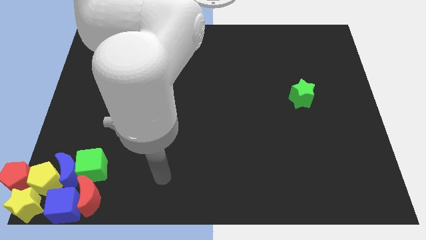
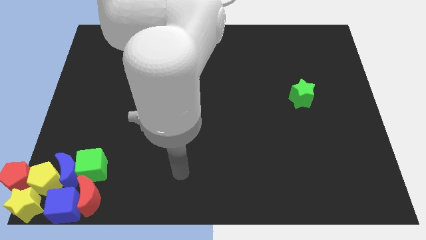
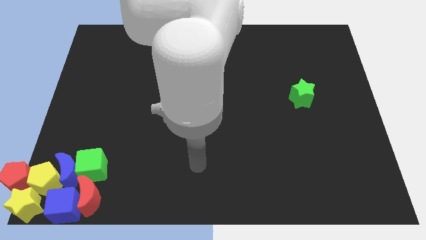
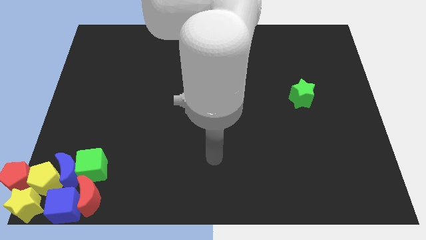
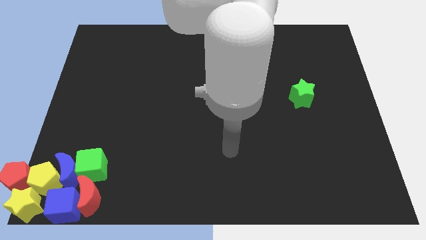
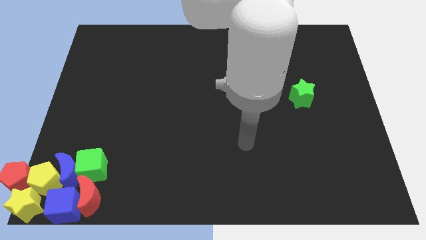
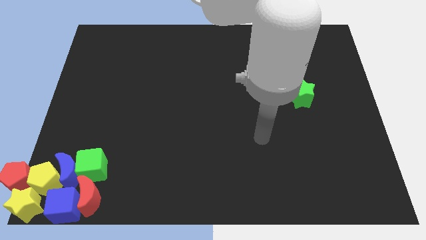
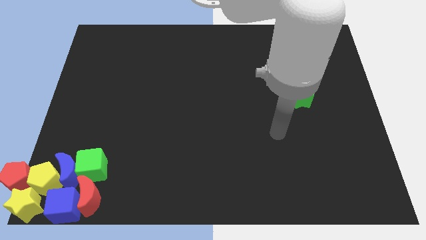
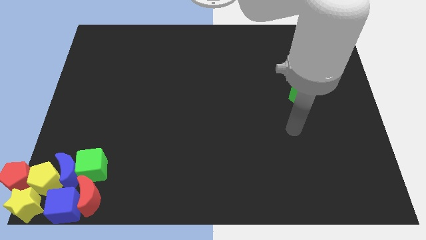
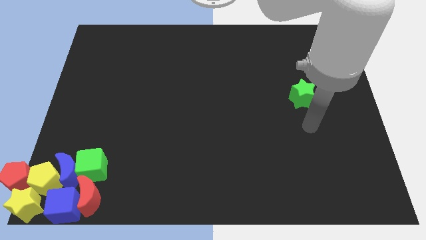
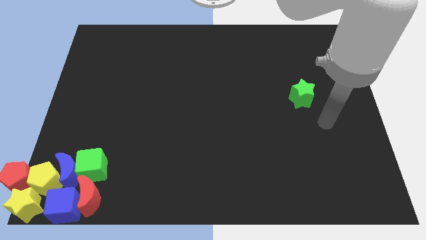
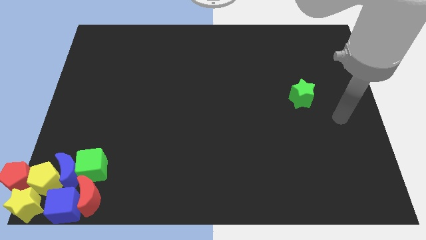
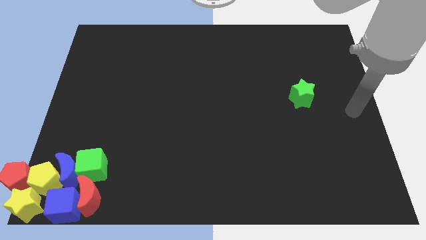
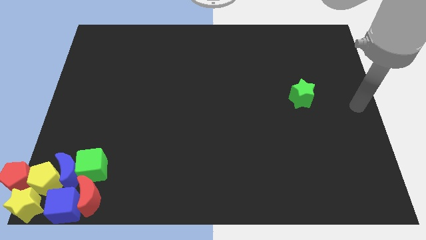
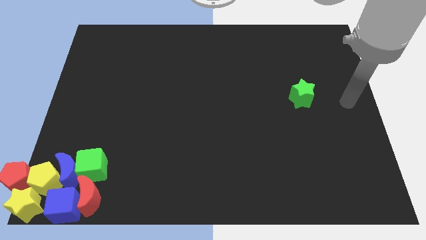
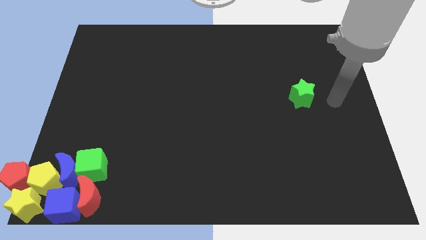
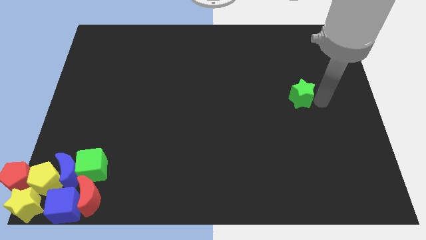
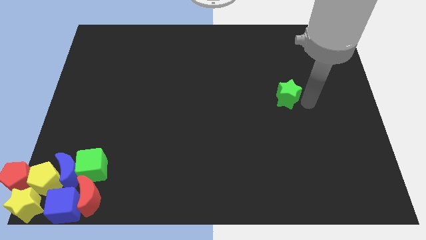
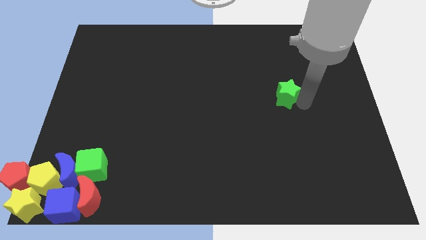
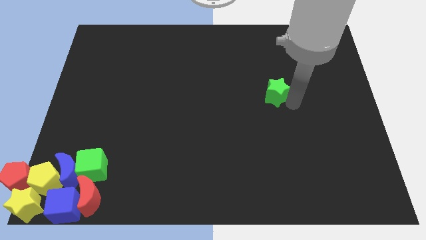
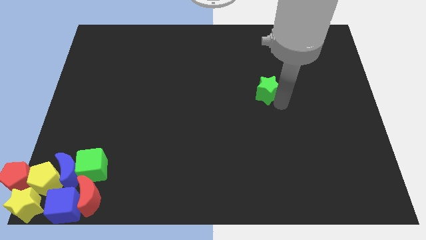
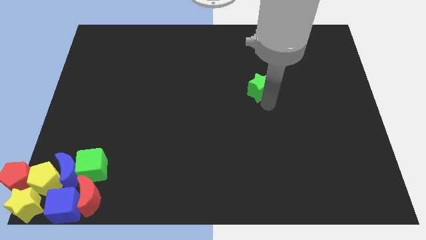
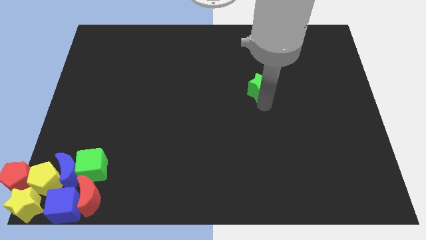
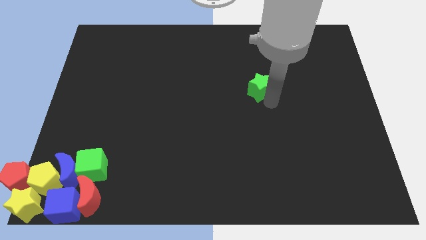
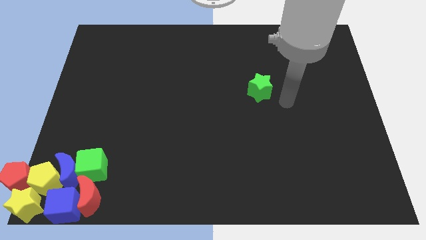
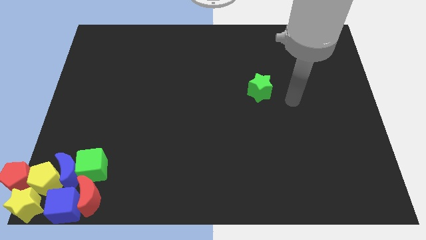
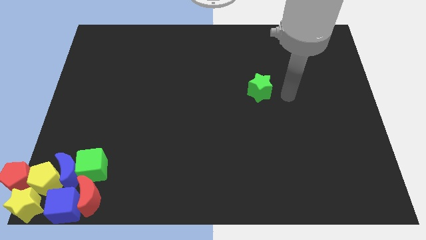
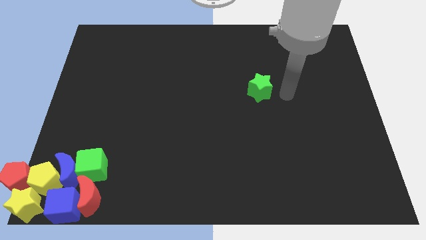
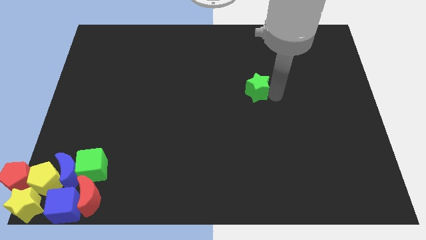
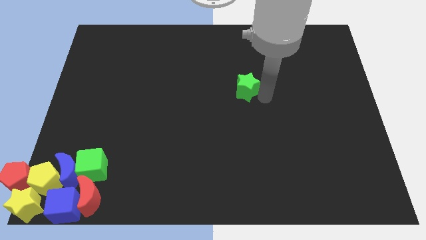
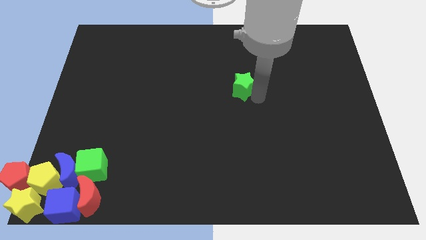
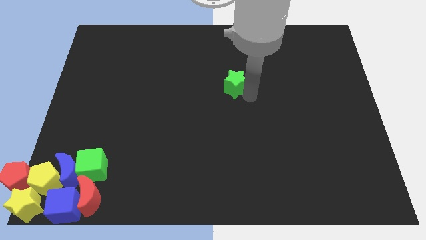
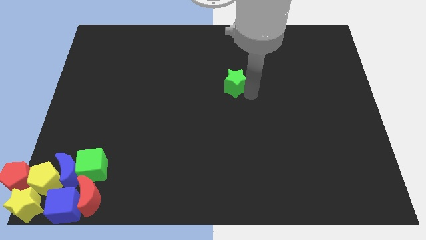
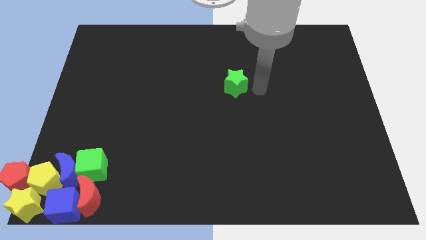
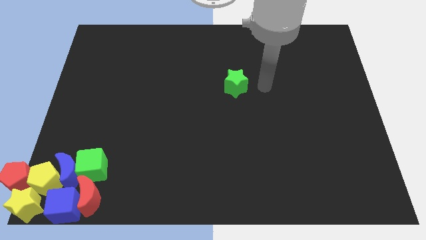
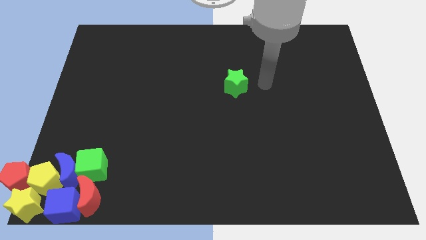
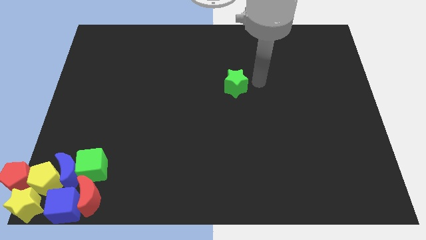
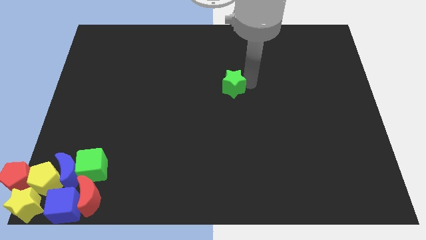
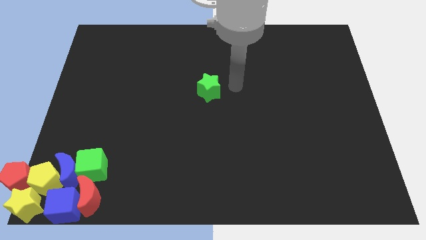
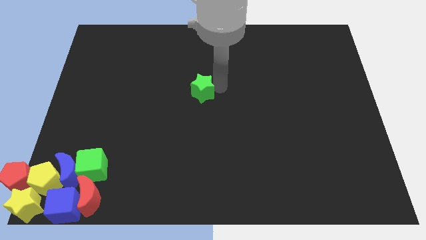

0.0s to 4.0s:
push the green star to the center of the board

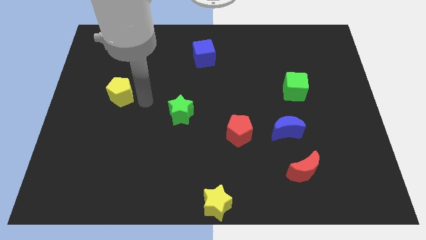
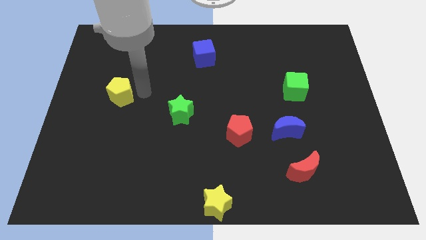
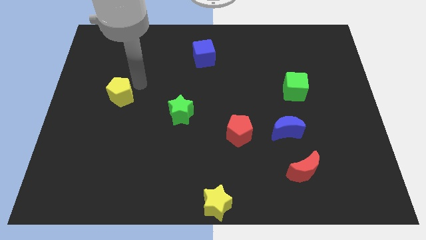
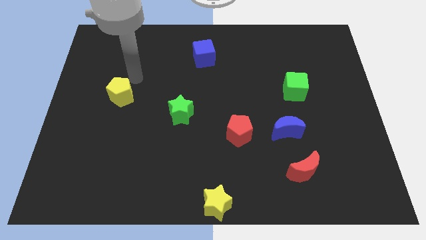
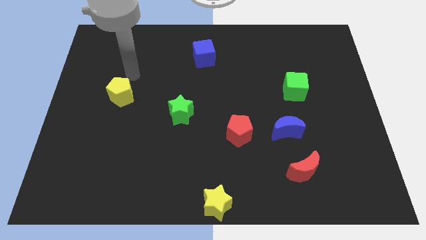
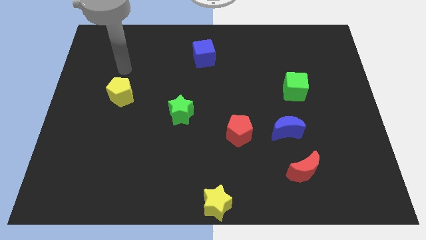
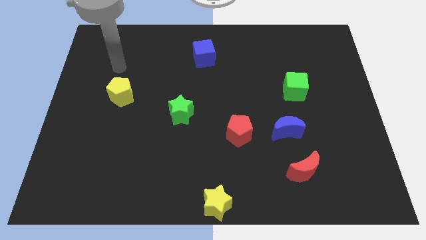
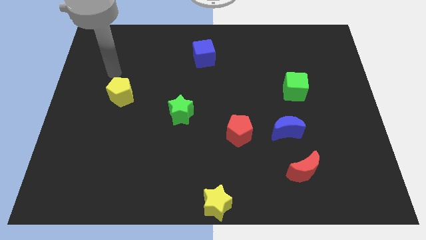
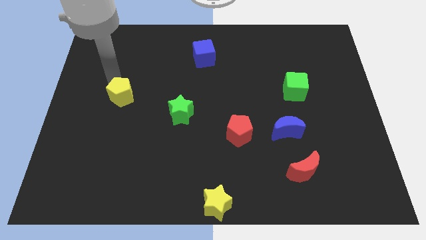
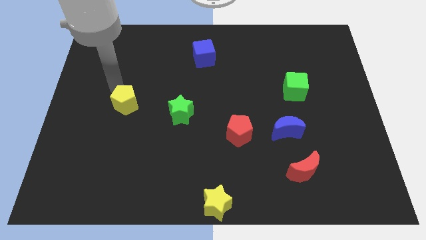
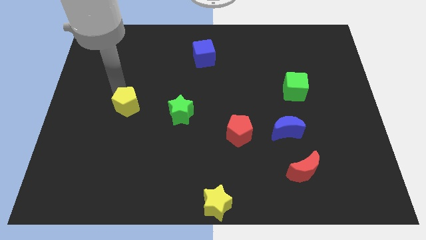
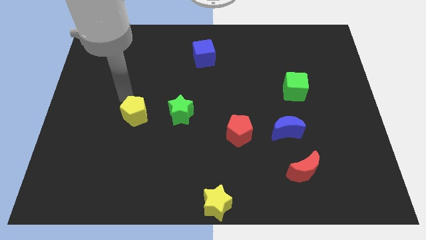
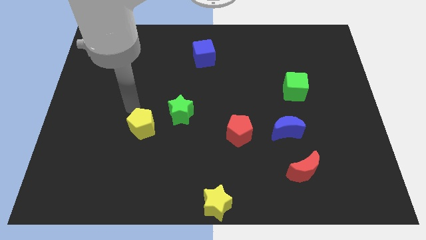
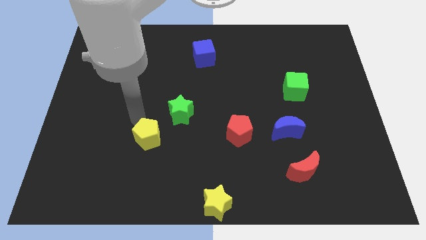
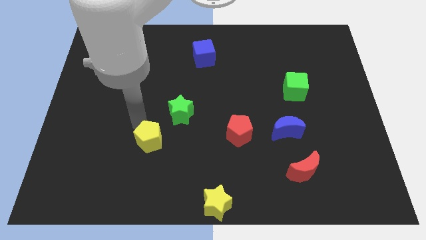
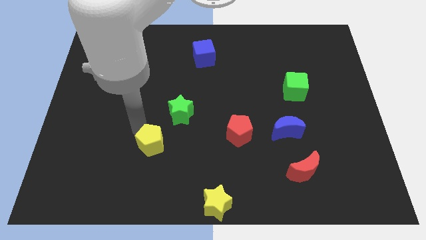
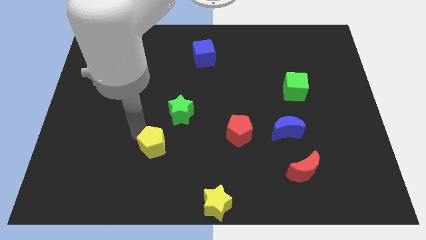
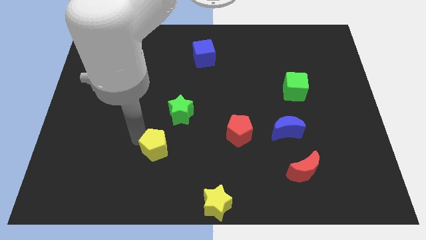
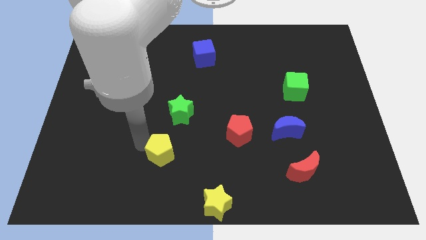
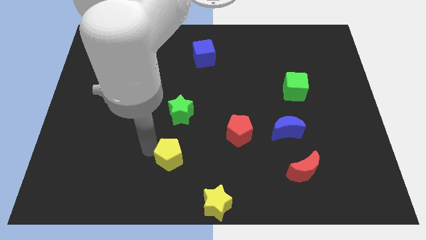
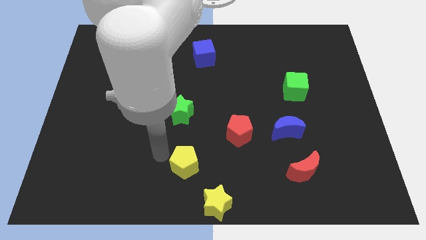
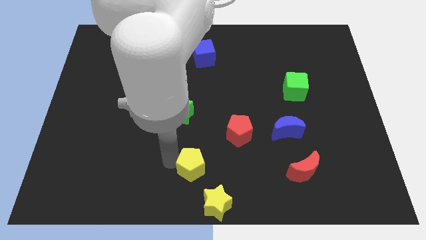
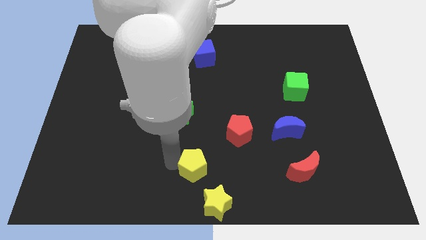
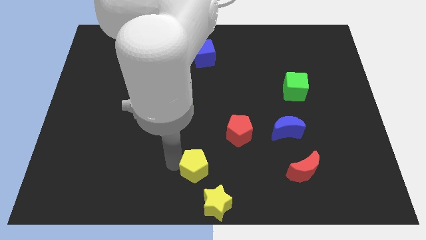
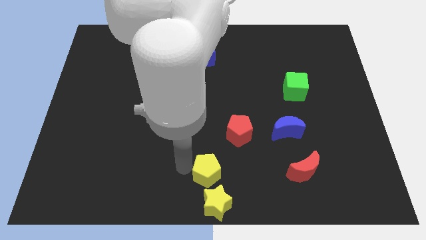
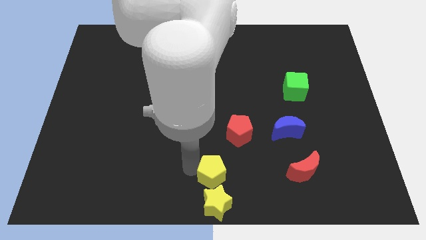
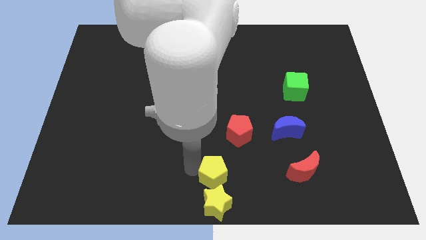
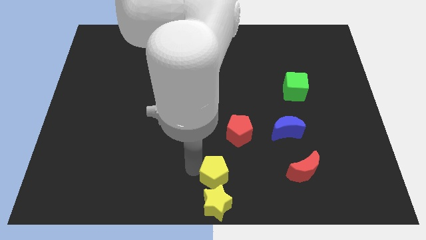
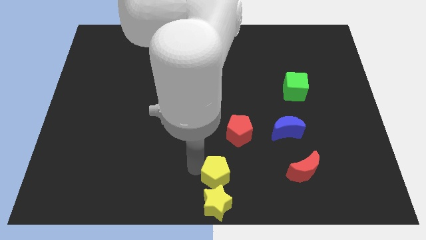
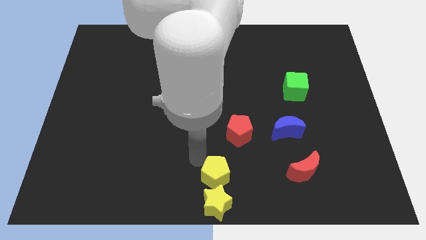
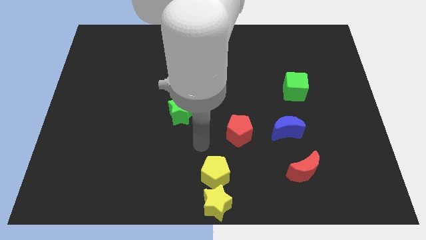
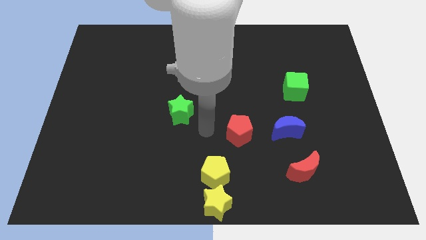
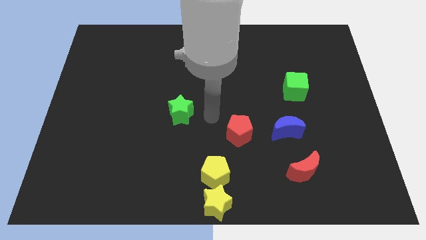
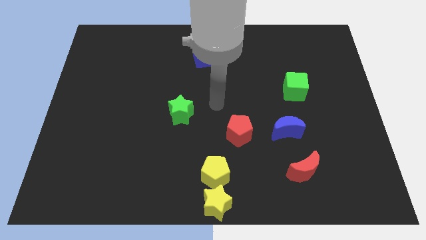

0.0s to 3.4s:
place the yellow pentagon in between the red pentagon and yellow star

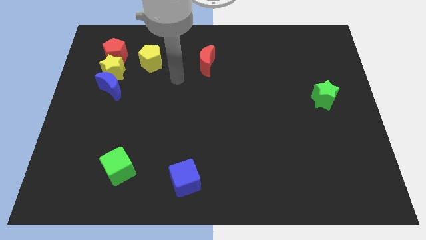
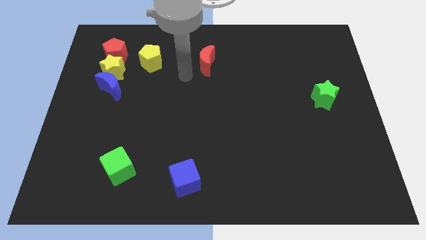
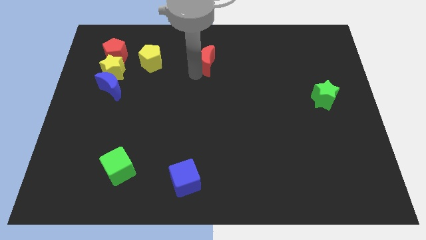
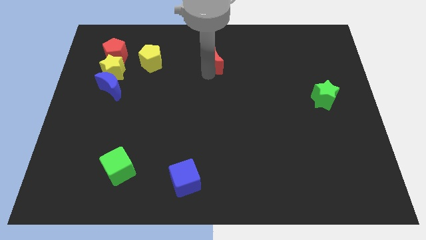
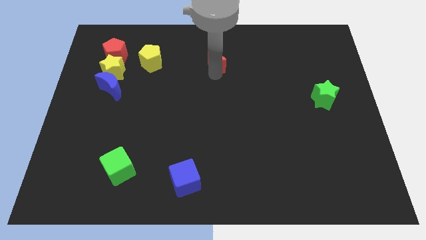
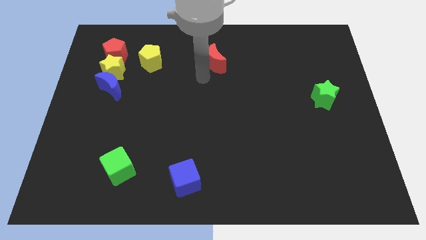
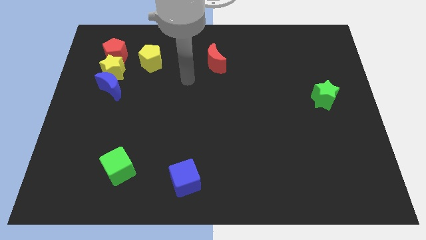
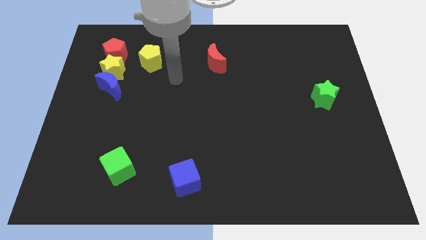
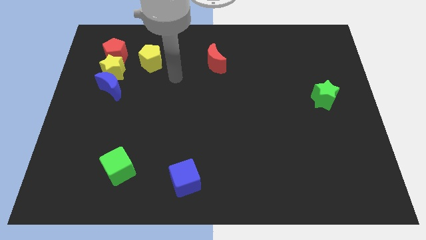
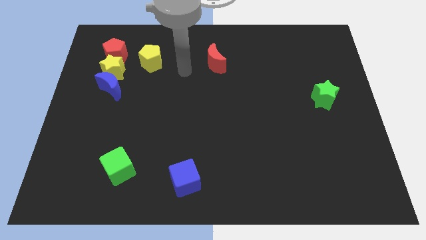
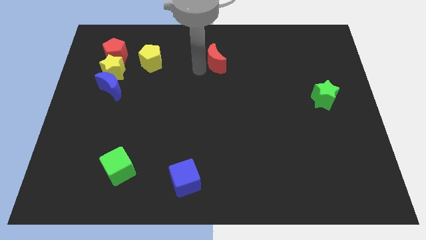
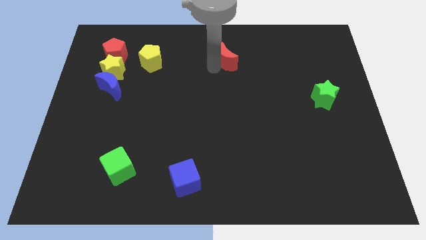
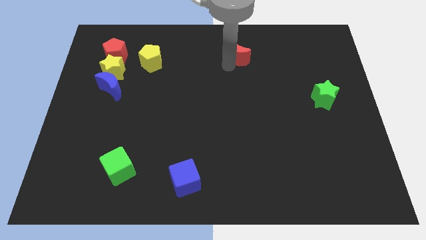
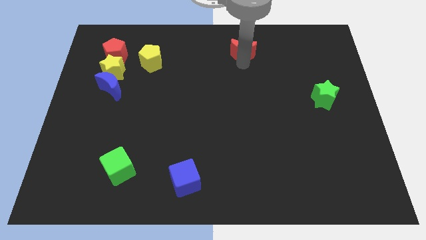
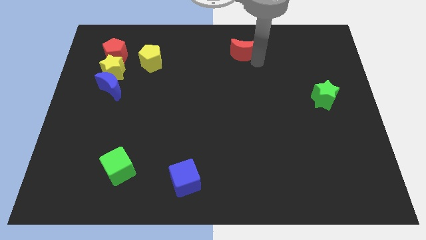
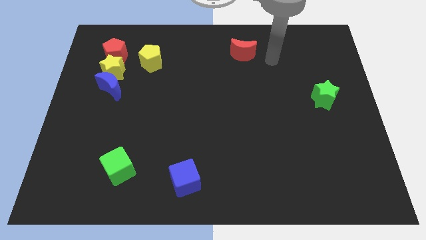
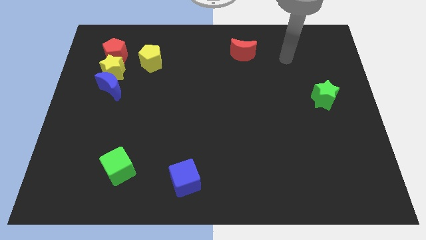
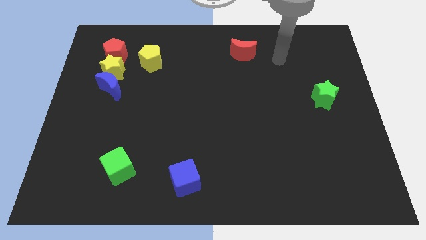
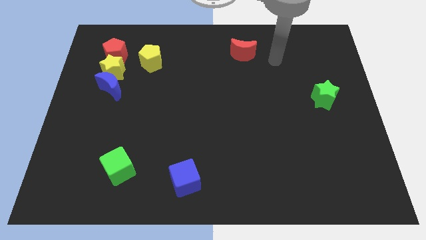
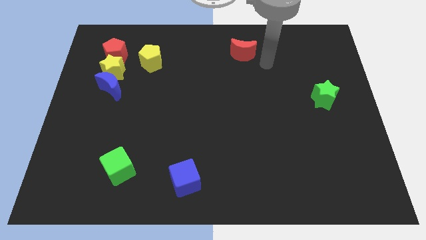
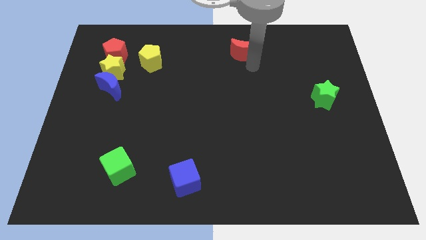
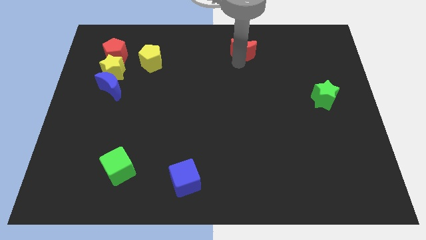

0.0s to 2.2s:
move red moon to the top center of the board
